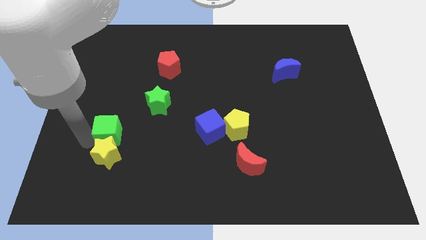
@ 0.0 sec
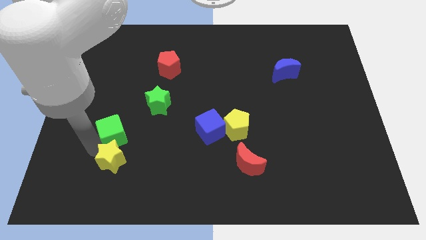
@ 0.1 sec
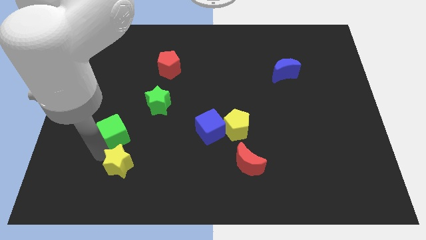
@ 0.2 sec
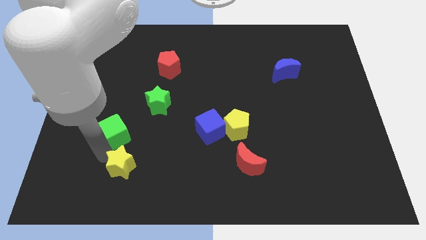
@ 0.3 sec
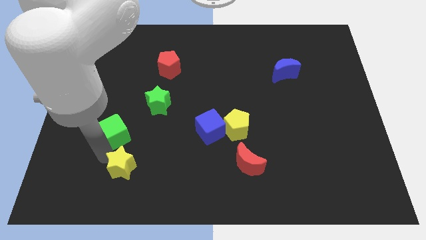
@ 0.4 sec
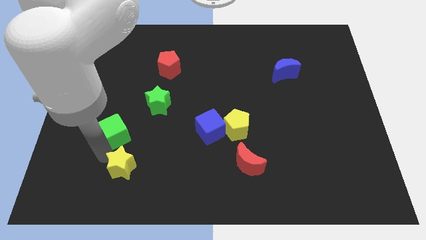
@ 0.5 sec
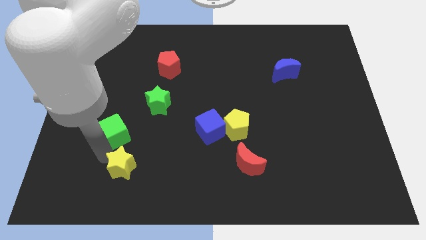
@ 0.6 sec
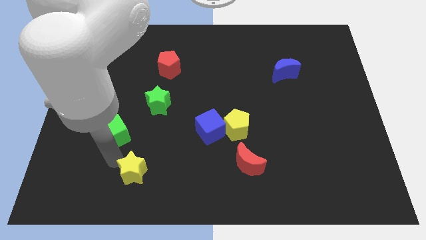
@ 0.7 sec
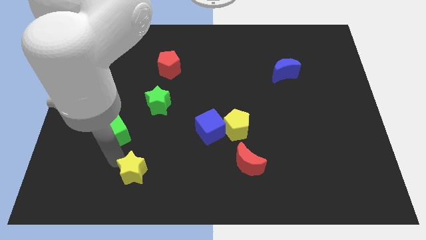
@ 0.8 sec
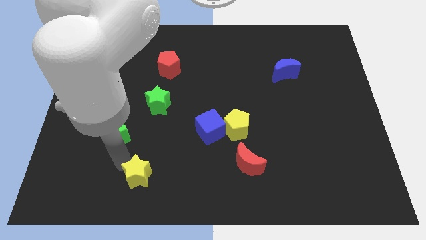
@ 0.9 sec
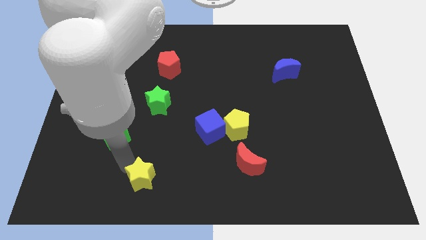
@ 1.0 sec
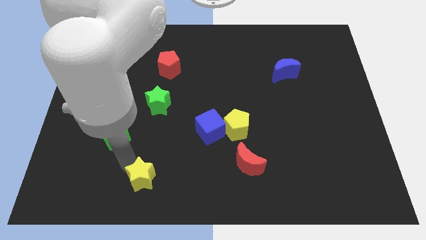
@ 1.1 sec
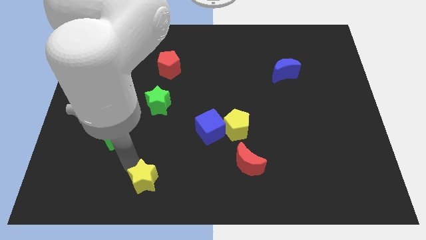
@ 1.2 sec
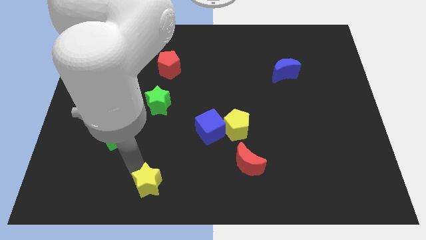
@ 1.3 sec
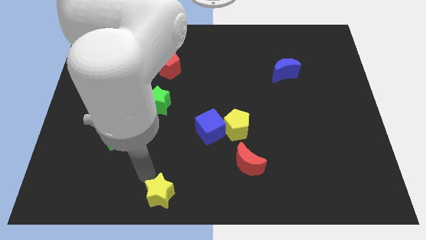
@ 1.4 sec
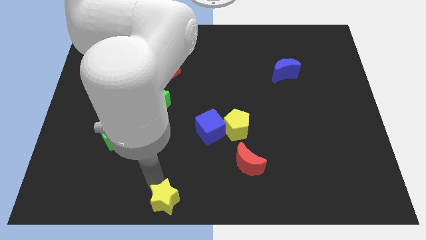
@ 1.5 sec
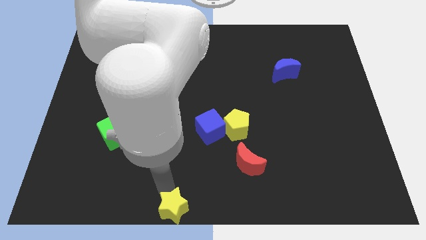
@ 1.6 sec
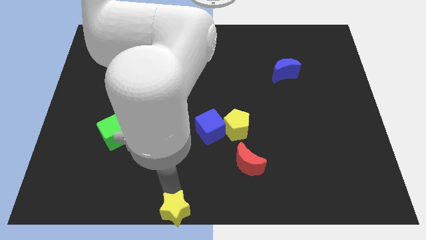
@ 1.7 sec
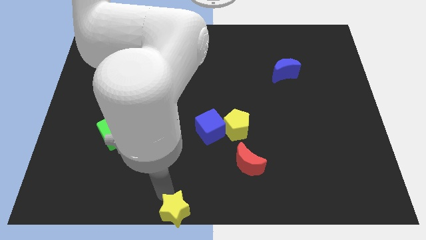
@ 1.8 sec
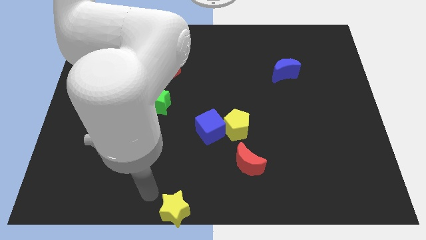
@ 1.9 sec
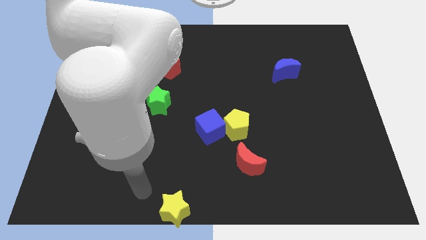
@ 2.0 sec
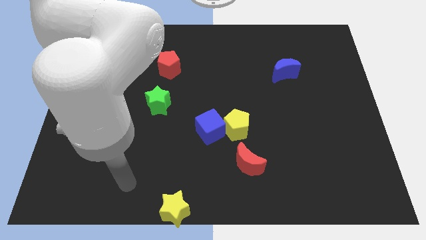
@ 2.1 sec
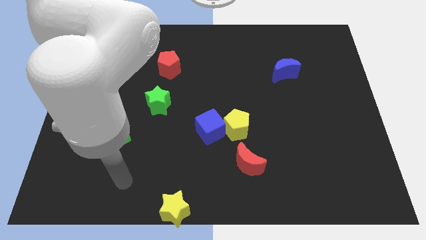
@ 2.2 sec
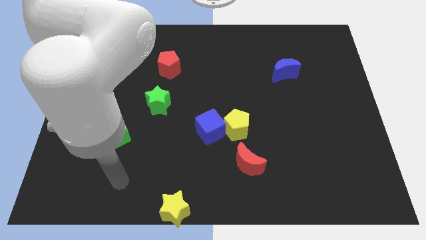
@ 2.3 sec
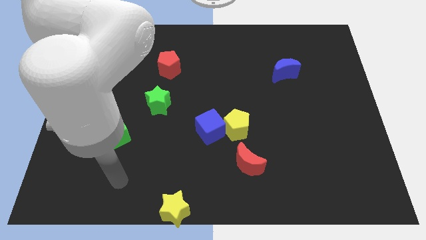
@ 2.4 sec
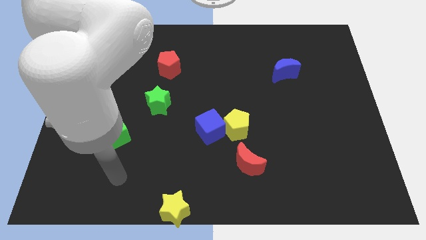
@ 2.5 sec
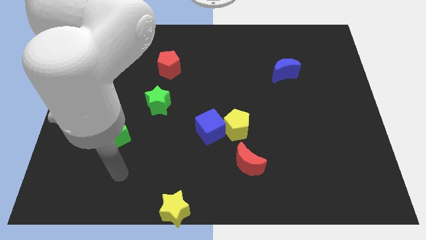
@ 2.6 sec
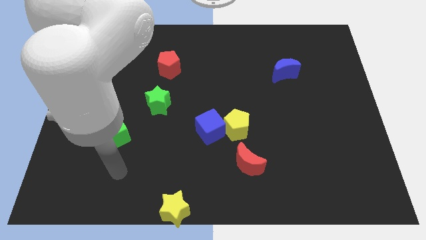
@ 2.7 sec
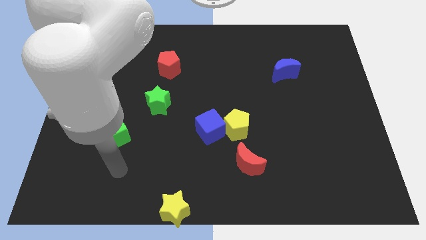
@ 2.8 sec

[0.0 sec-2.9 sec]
move the yellow star to the bottom centre of the board

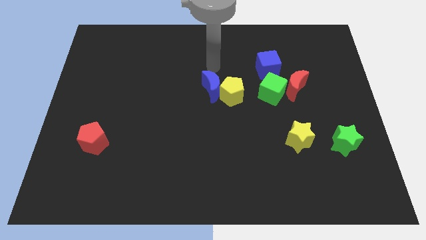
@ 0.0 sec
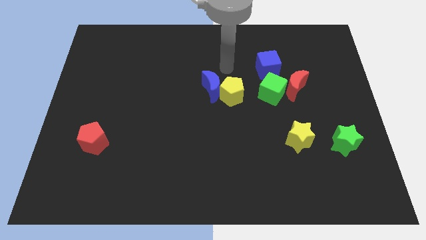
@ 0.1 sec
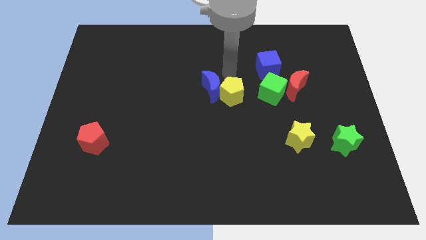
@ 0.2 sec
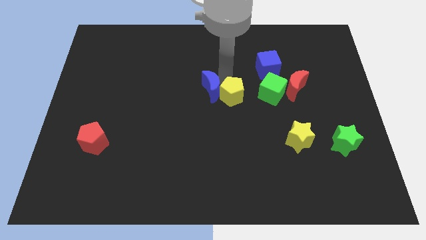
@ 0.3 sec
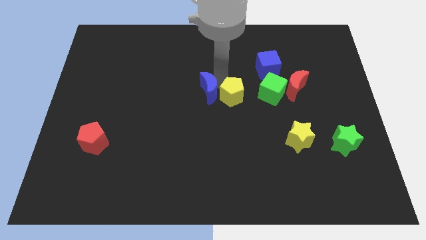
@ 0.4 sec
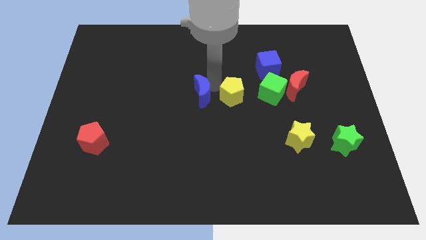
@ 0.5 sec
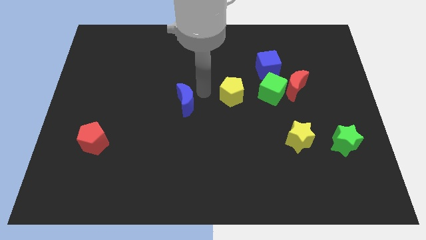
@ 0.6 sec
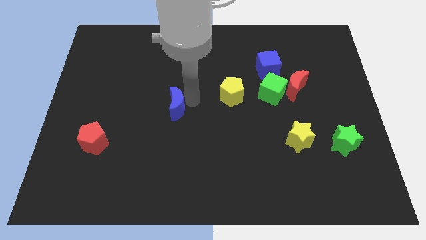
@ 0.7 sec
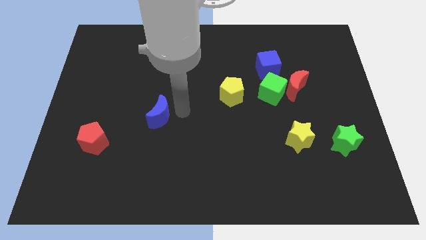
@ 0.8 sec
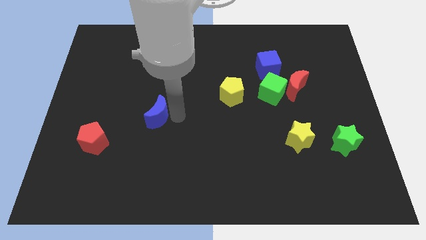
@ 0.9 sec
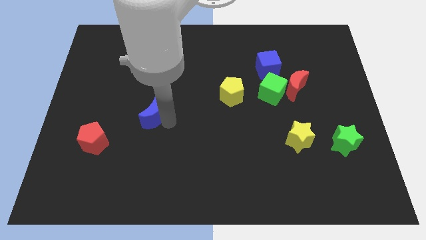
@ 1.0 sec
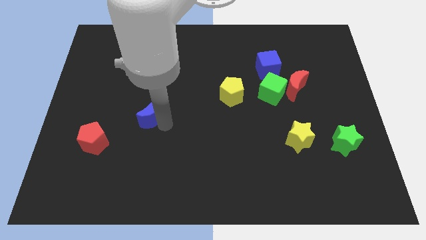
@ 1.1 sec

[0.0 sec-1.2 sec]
move the blue crescent away from the yellow pentagon

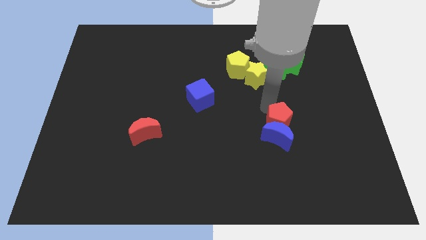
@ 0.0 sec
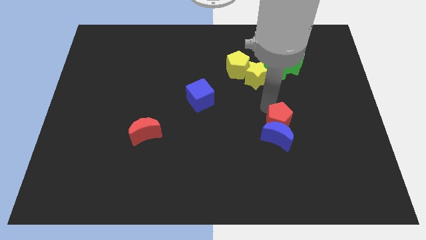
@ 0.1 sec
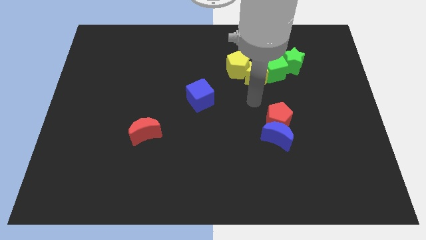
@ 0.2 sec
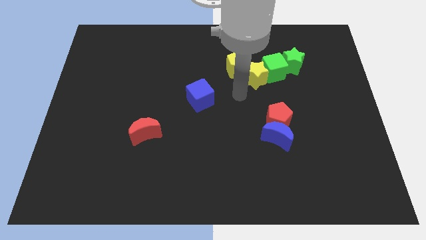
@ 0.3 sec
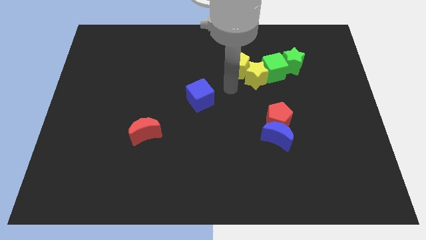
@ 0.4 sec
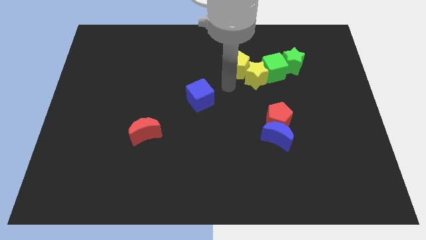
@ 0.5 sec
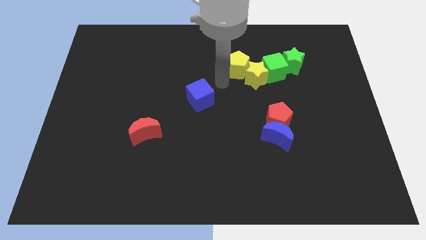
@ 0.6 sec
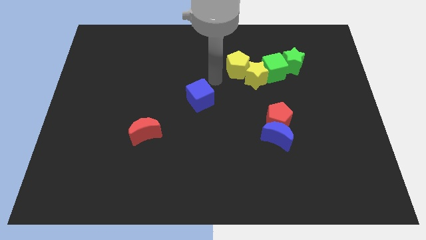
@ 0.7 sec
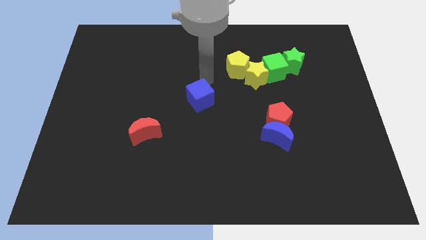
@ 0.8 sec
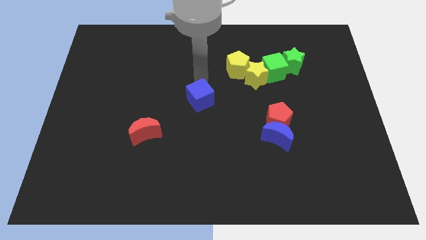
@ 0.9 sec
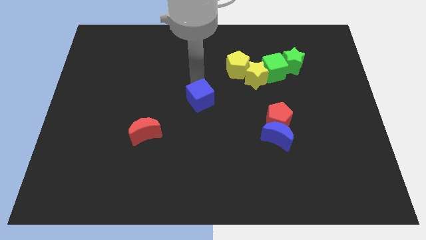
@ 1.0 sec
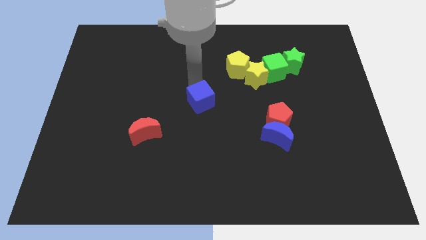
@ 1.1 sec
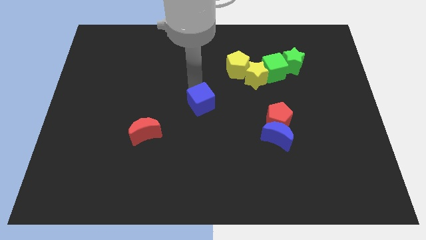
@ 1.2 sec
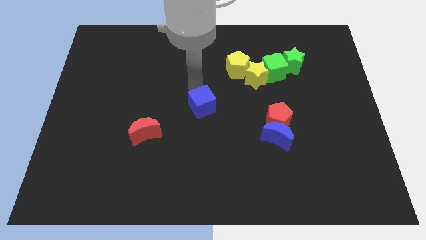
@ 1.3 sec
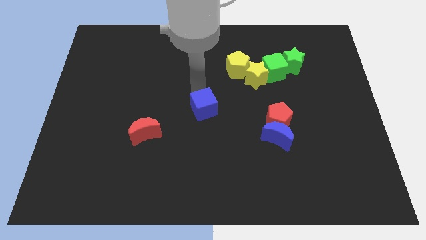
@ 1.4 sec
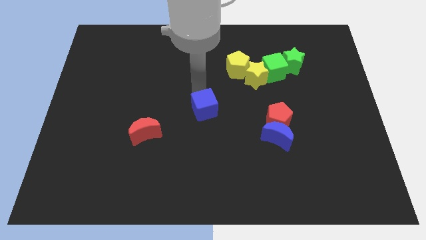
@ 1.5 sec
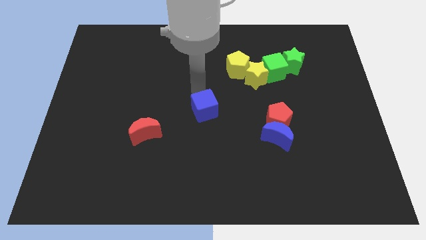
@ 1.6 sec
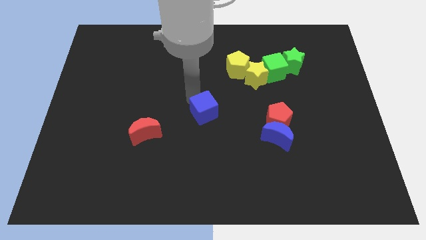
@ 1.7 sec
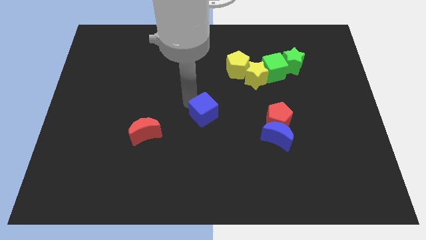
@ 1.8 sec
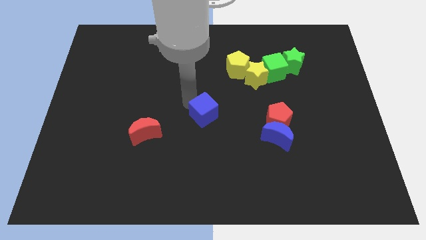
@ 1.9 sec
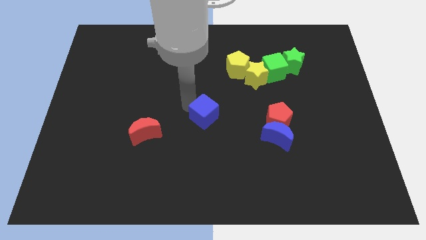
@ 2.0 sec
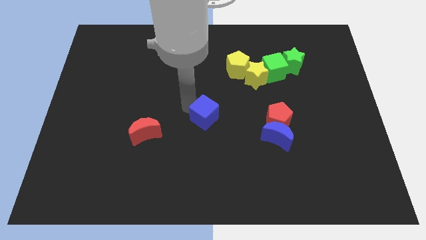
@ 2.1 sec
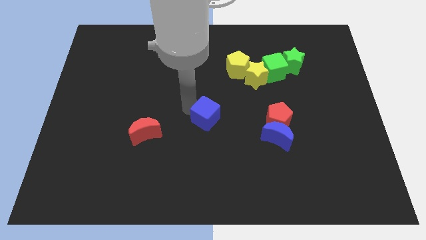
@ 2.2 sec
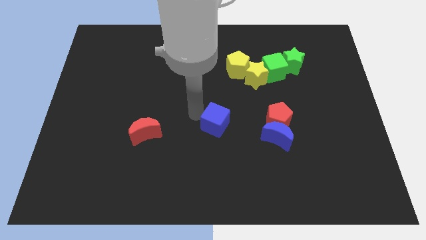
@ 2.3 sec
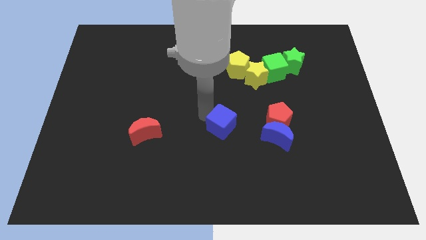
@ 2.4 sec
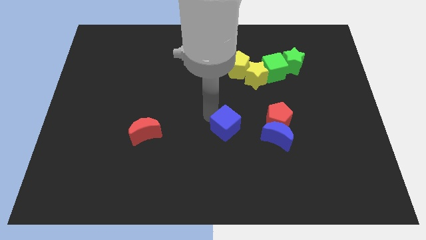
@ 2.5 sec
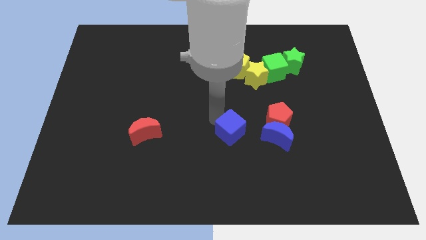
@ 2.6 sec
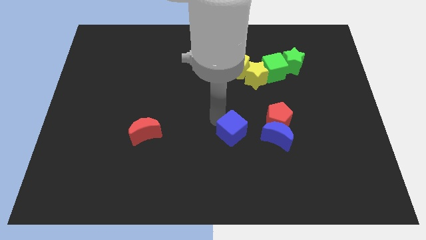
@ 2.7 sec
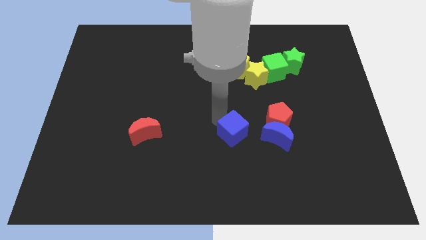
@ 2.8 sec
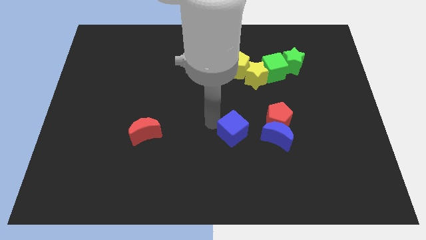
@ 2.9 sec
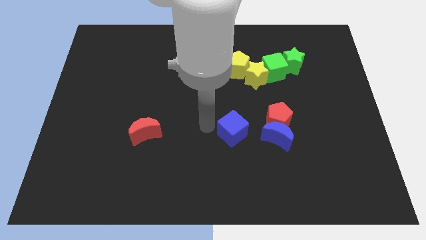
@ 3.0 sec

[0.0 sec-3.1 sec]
push the blue cube to the left of the blue crescent

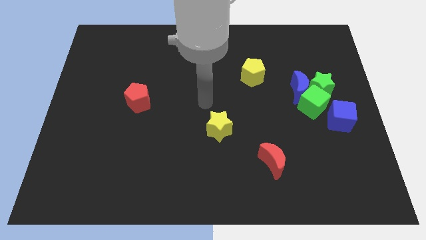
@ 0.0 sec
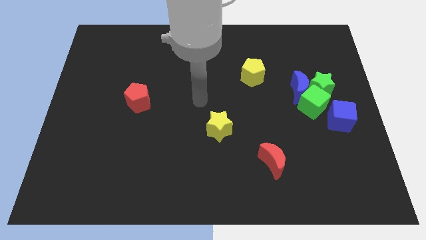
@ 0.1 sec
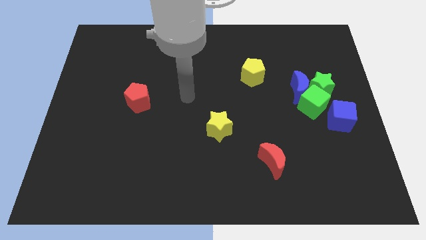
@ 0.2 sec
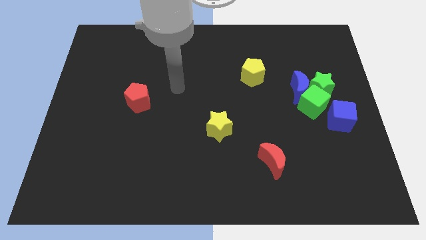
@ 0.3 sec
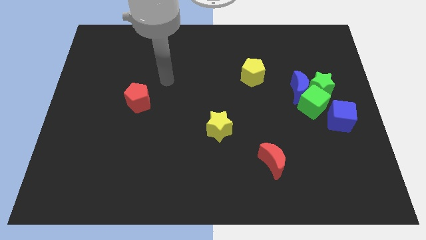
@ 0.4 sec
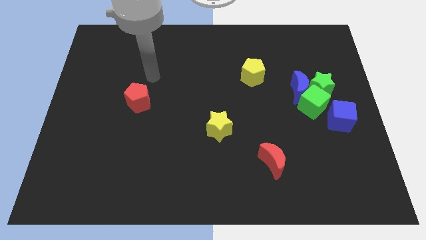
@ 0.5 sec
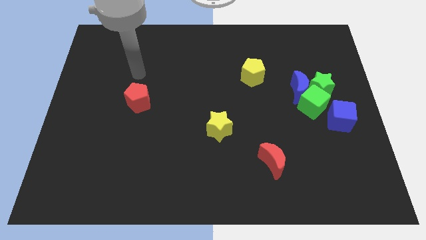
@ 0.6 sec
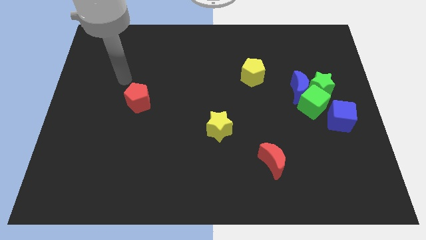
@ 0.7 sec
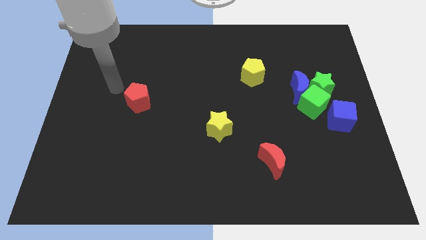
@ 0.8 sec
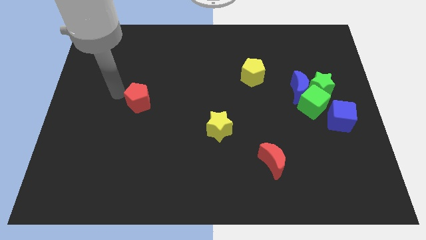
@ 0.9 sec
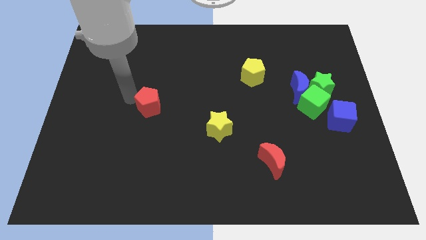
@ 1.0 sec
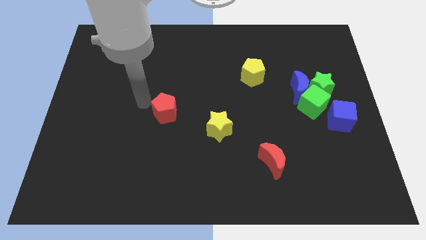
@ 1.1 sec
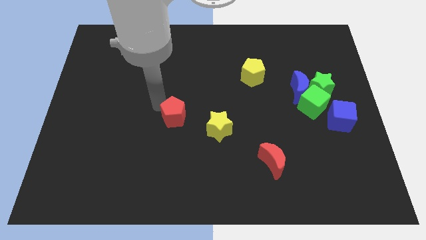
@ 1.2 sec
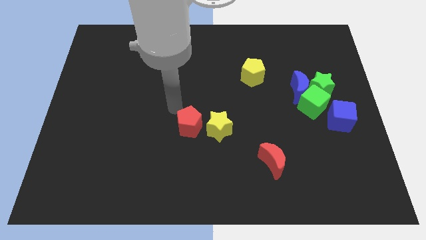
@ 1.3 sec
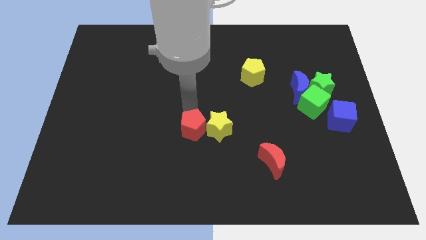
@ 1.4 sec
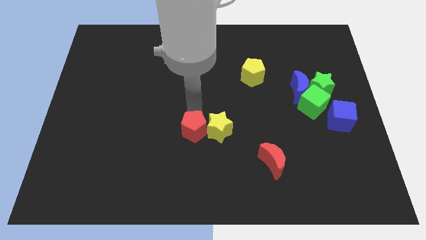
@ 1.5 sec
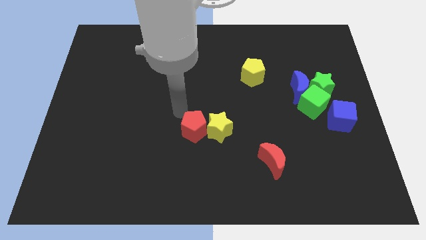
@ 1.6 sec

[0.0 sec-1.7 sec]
push the red pentagon into the yellow star
